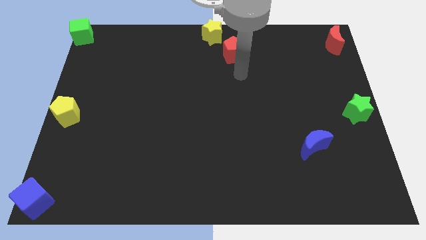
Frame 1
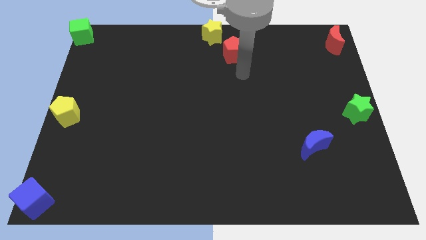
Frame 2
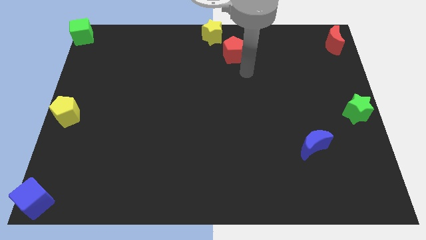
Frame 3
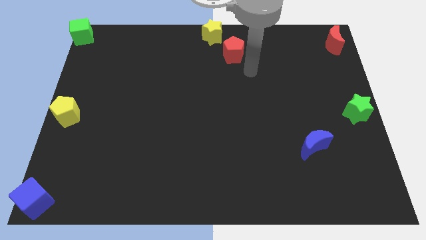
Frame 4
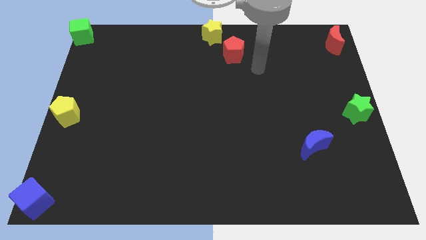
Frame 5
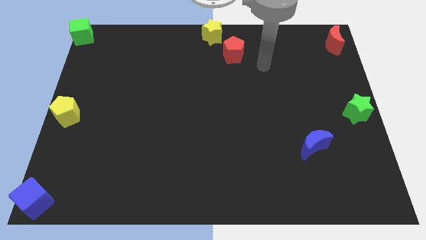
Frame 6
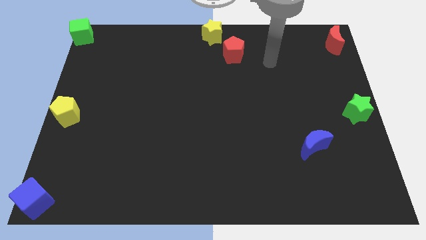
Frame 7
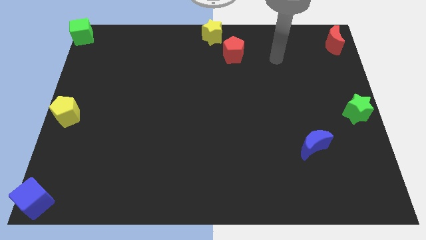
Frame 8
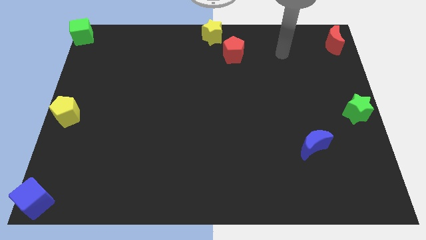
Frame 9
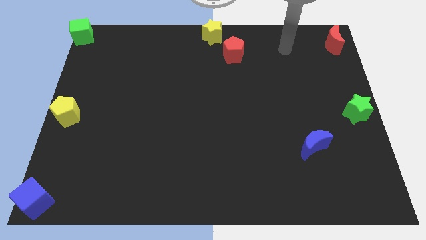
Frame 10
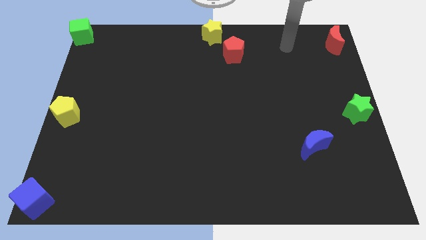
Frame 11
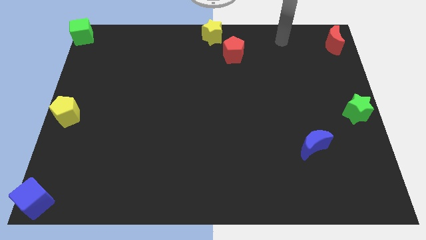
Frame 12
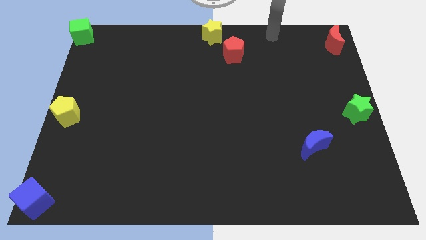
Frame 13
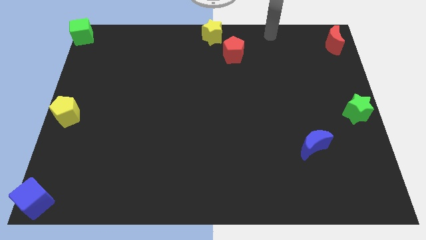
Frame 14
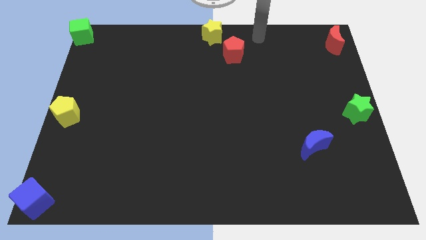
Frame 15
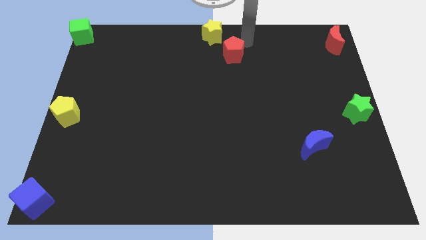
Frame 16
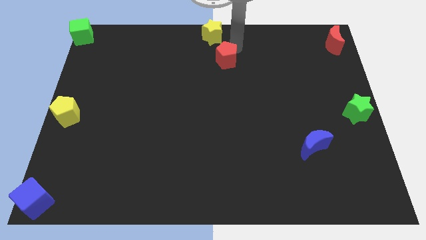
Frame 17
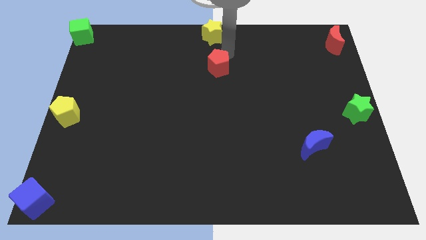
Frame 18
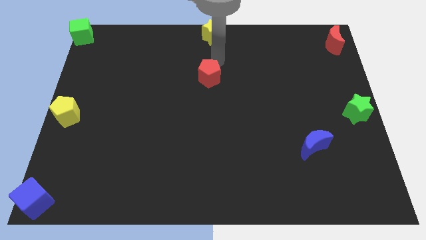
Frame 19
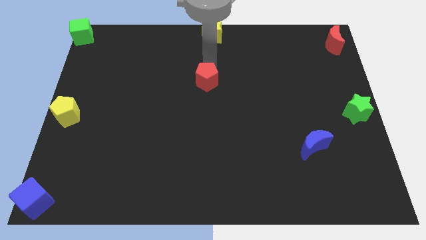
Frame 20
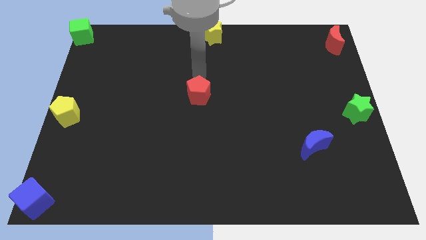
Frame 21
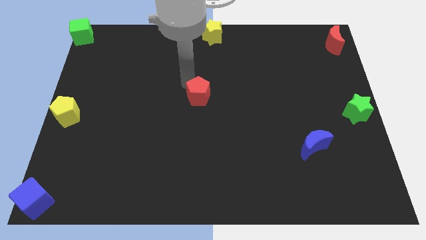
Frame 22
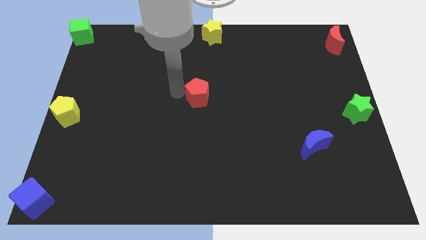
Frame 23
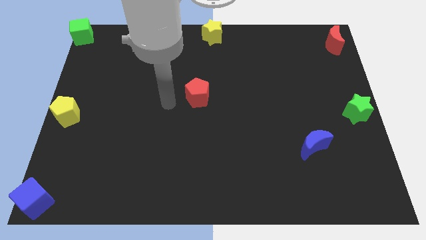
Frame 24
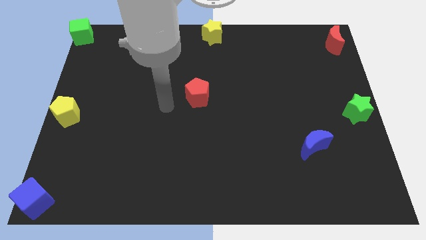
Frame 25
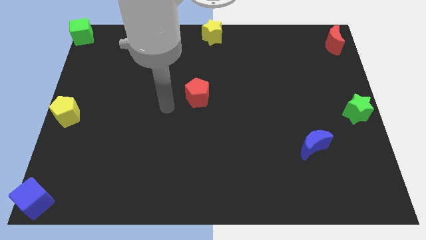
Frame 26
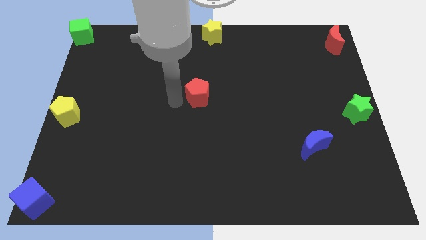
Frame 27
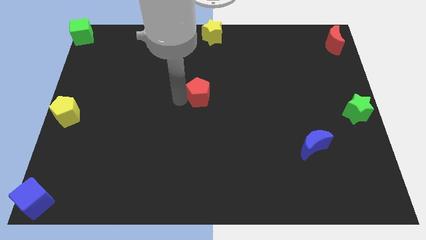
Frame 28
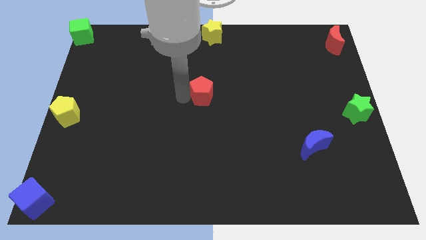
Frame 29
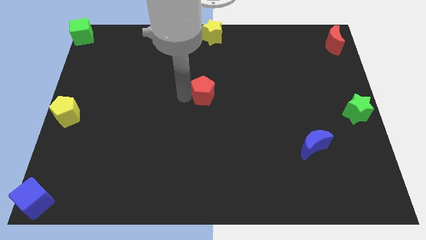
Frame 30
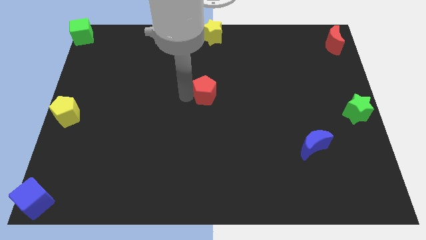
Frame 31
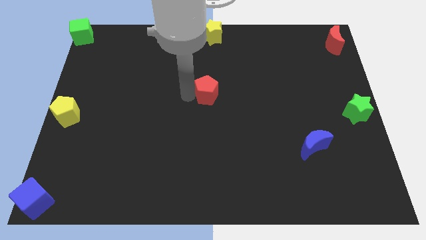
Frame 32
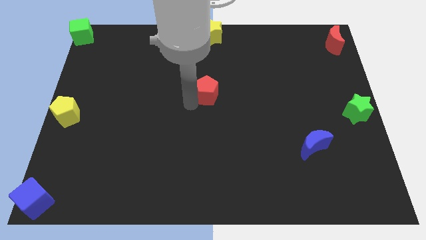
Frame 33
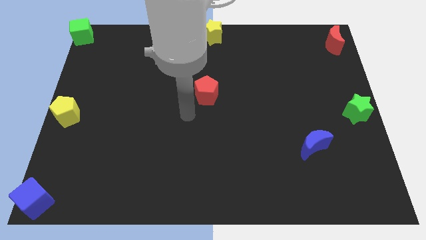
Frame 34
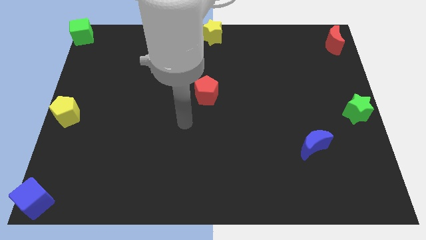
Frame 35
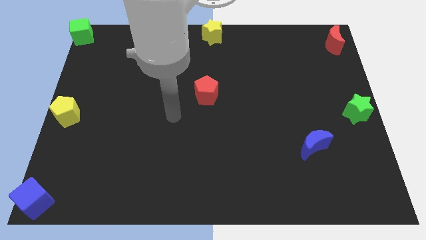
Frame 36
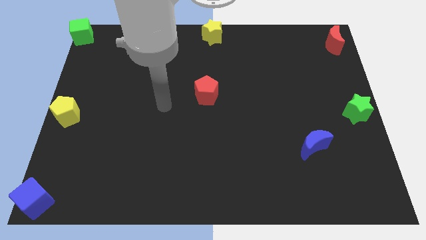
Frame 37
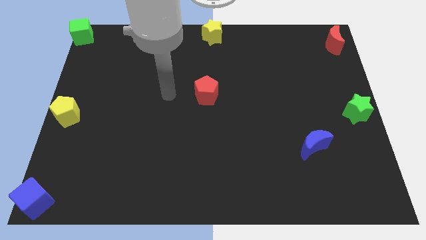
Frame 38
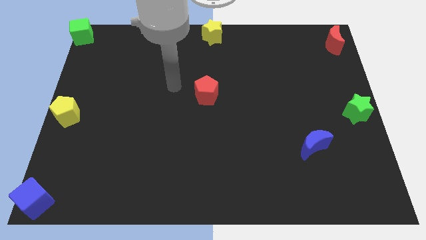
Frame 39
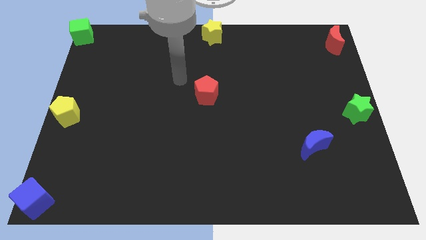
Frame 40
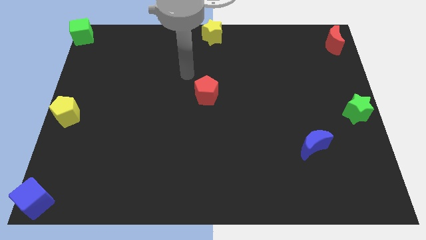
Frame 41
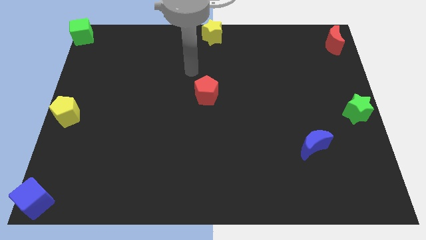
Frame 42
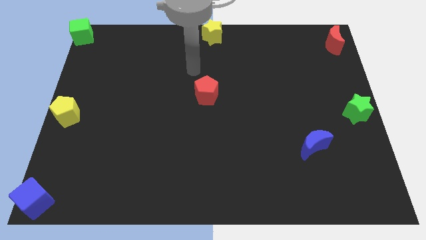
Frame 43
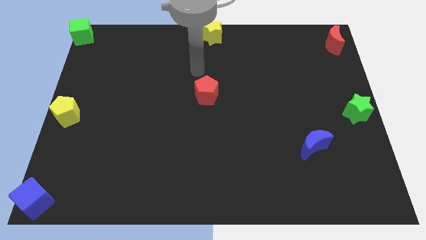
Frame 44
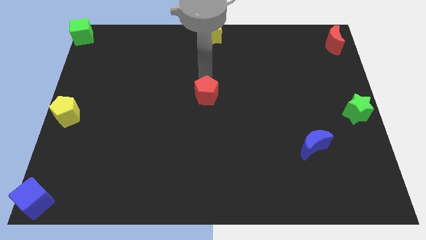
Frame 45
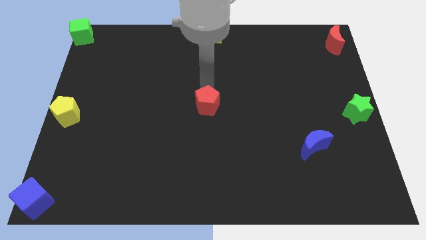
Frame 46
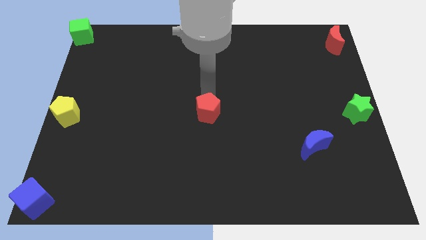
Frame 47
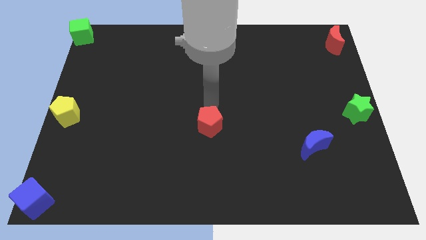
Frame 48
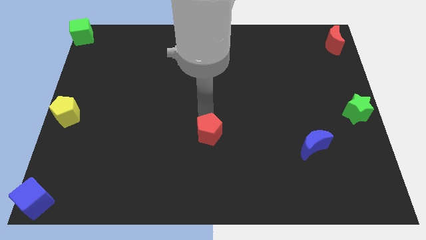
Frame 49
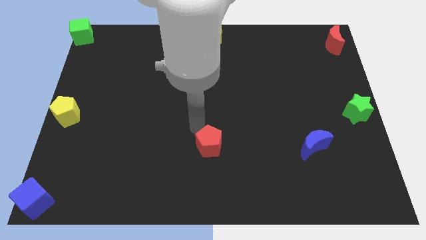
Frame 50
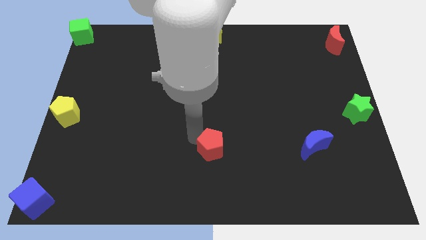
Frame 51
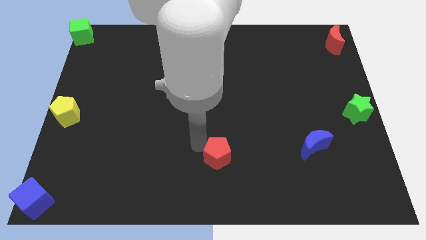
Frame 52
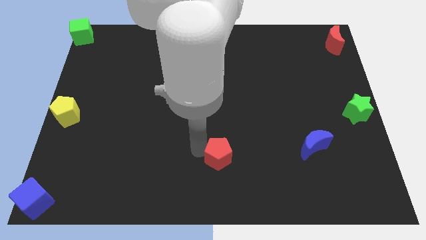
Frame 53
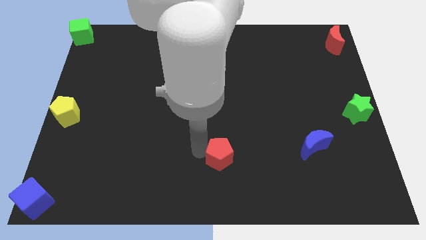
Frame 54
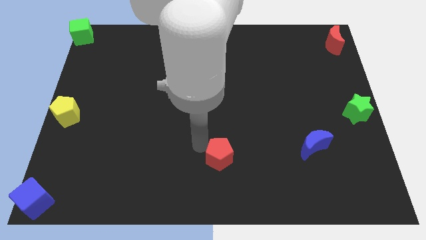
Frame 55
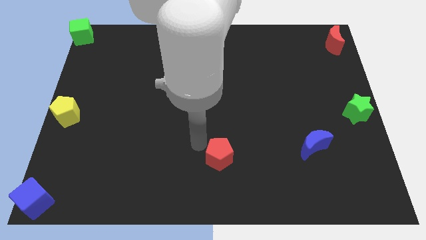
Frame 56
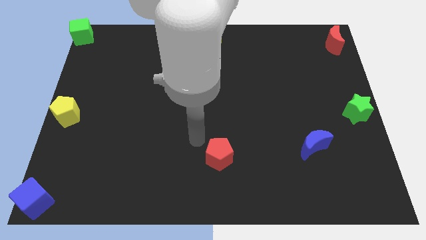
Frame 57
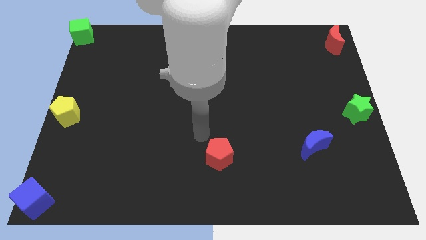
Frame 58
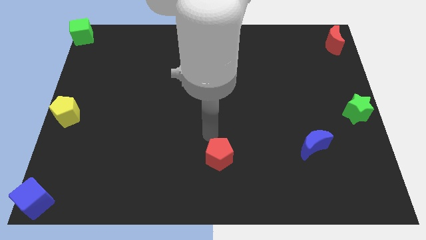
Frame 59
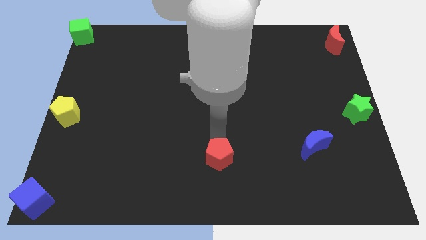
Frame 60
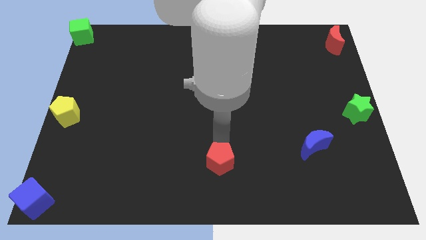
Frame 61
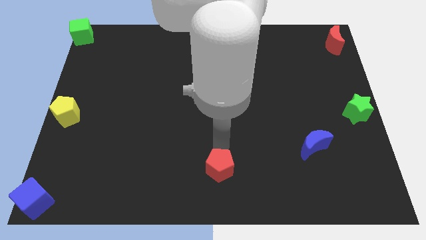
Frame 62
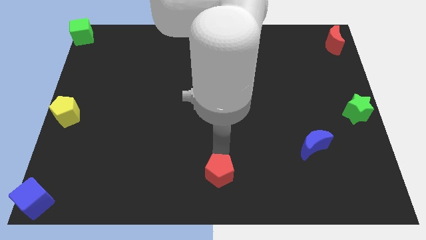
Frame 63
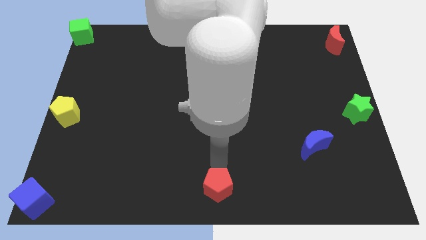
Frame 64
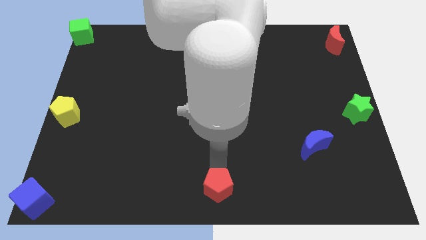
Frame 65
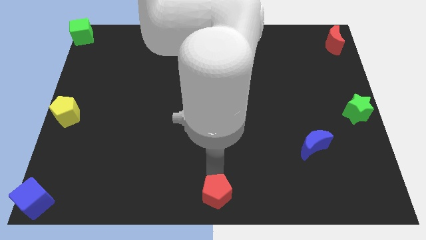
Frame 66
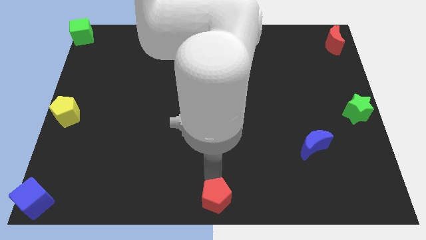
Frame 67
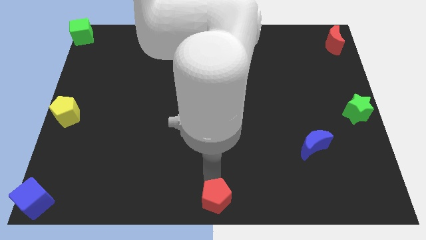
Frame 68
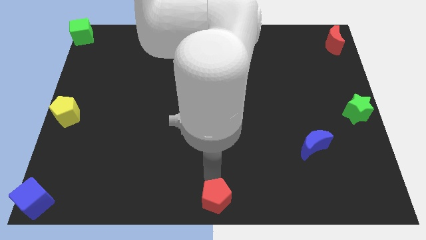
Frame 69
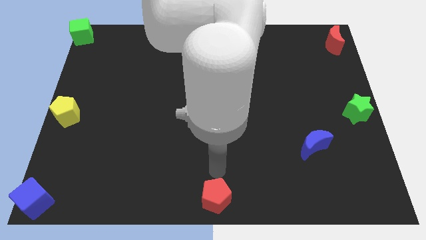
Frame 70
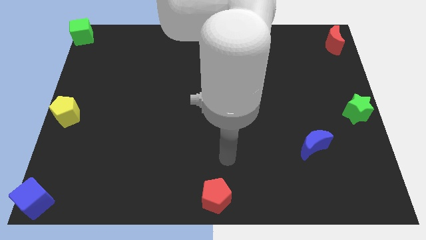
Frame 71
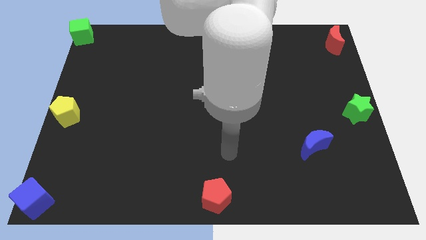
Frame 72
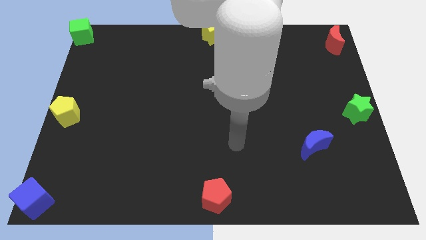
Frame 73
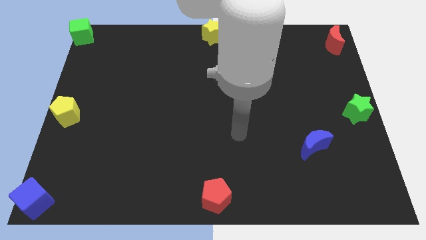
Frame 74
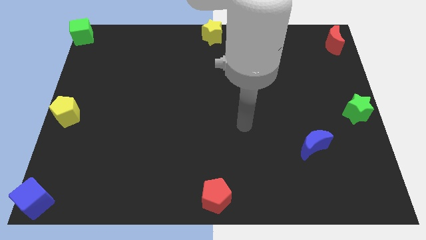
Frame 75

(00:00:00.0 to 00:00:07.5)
place the red pentagon to the bottom center of the board

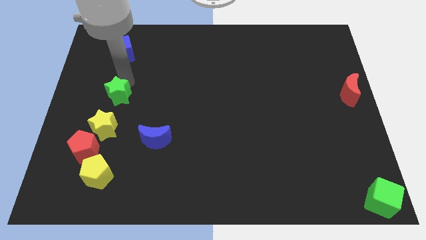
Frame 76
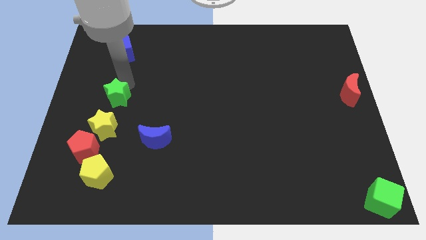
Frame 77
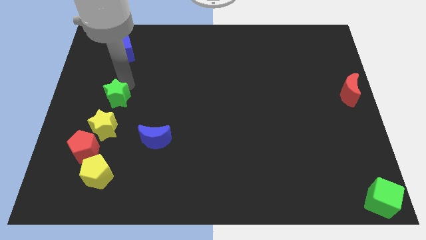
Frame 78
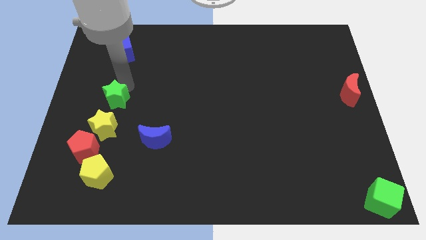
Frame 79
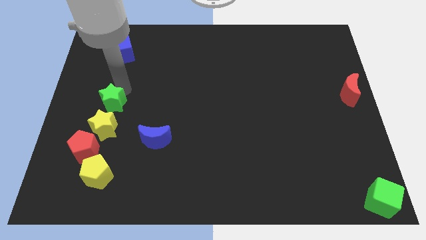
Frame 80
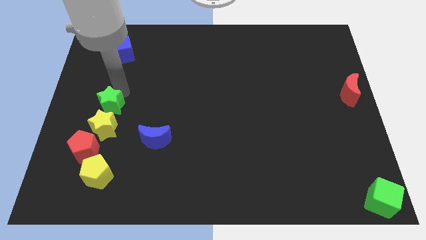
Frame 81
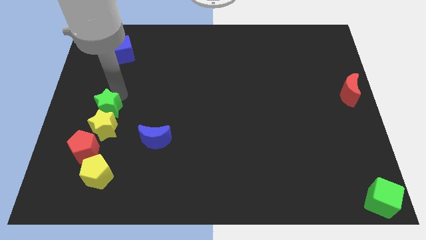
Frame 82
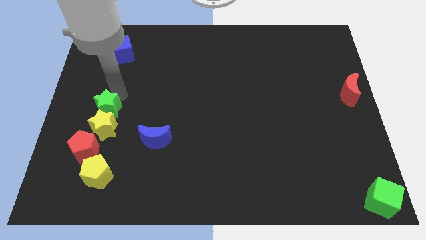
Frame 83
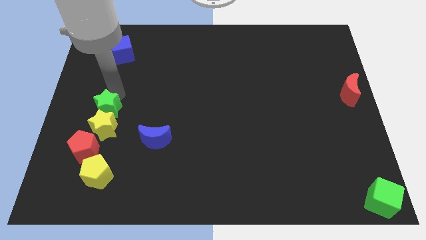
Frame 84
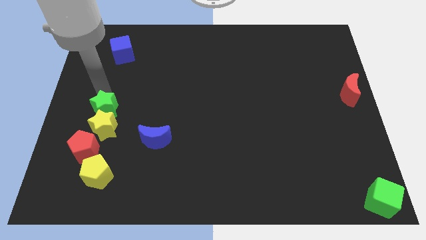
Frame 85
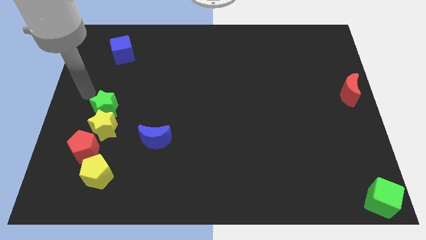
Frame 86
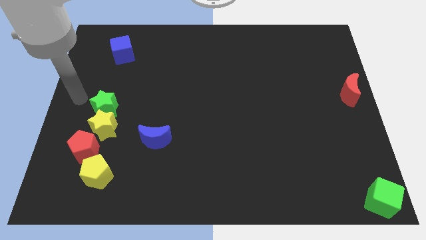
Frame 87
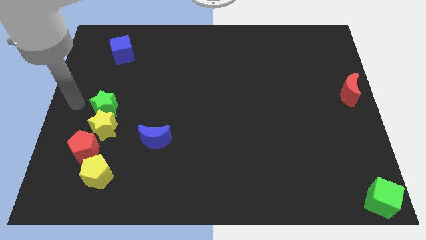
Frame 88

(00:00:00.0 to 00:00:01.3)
push the green star into the yellow star
